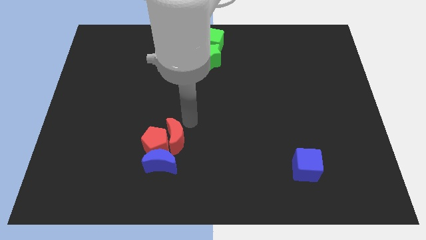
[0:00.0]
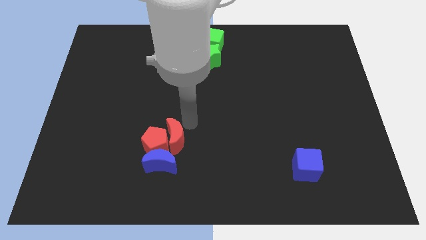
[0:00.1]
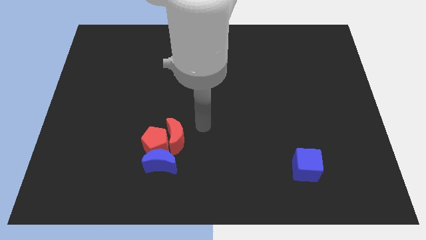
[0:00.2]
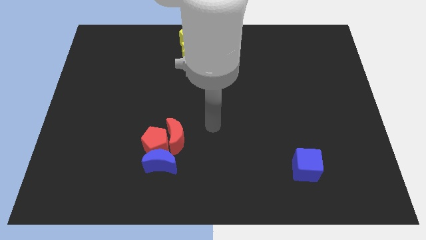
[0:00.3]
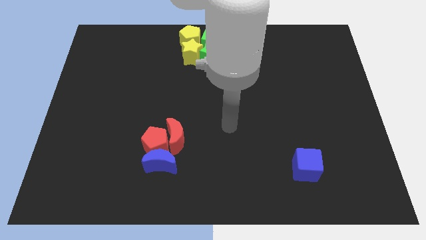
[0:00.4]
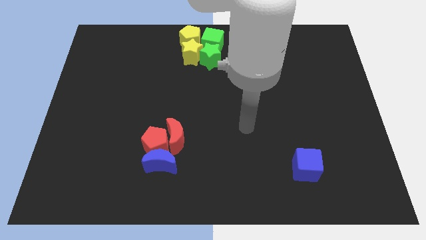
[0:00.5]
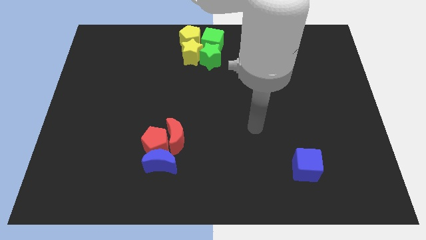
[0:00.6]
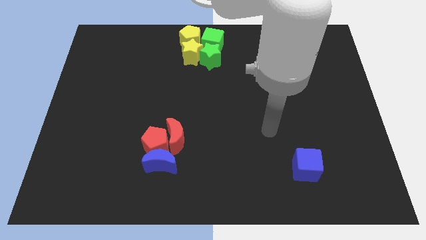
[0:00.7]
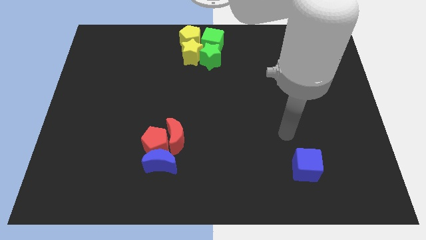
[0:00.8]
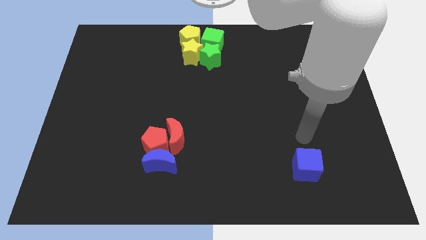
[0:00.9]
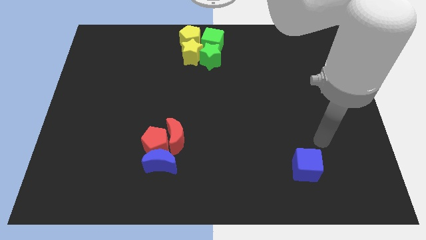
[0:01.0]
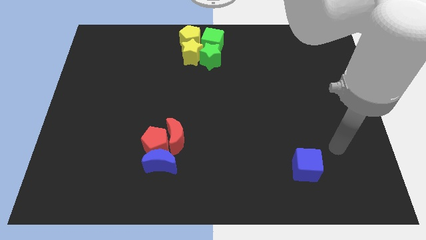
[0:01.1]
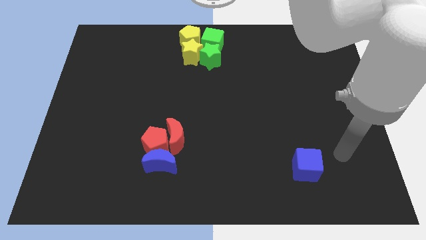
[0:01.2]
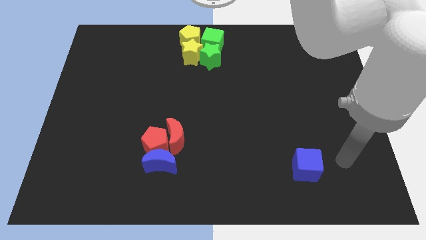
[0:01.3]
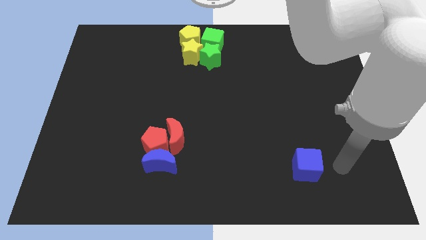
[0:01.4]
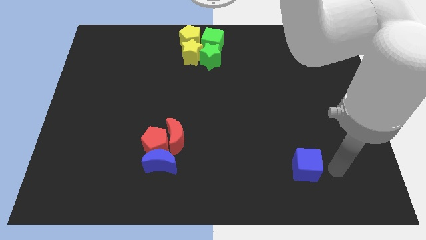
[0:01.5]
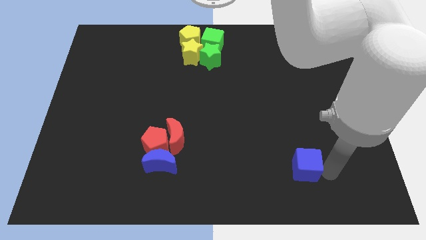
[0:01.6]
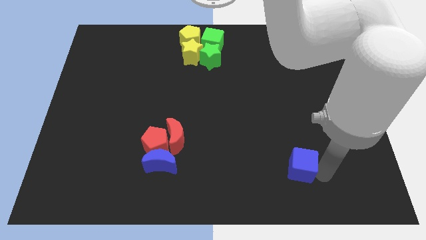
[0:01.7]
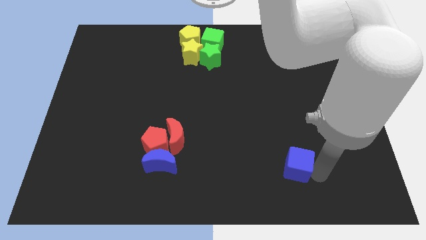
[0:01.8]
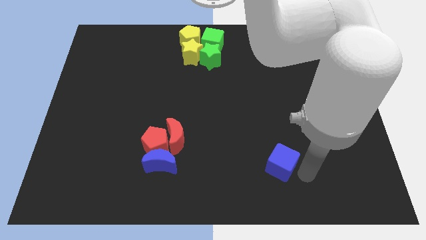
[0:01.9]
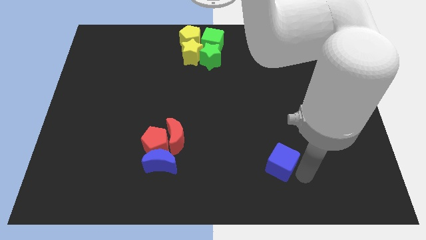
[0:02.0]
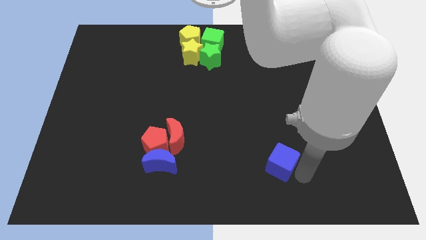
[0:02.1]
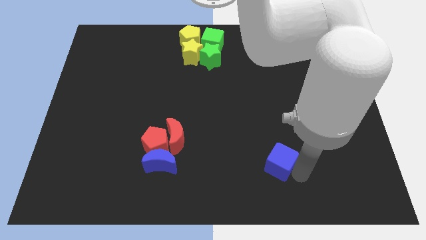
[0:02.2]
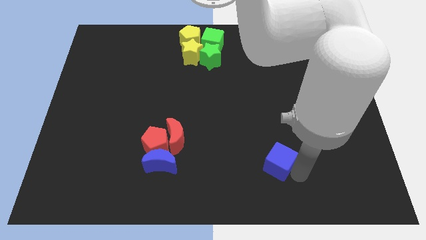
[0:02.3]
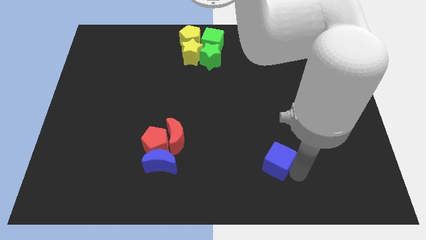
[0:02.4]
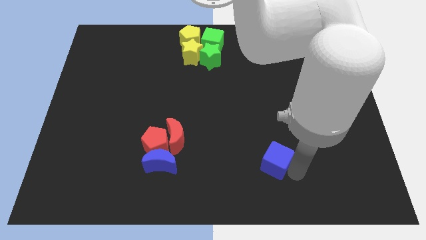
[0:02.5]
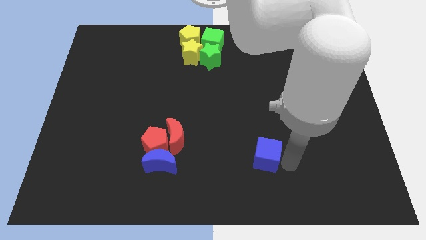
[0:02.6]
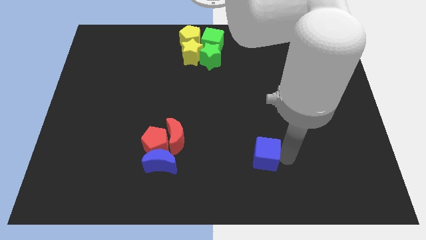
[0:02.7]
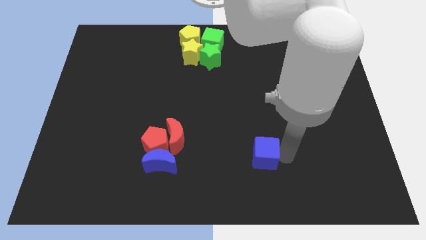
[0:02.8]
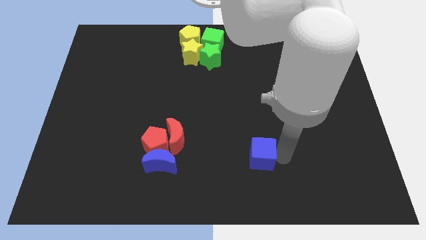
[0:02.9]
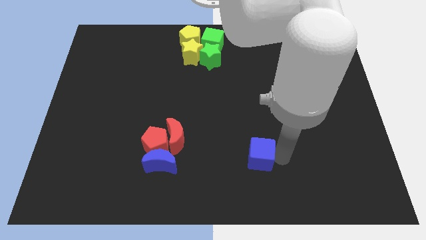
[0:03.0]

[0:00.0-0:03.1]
place blue cube parallel to blue moon

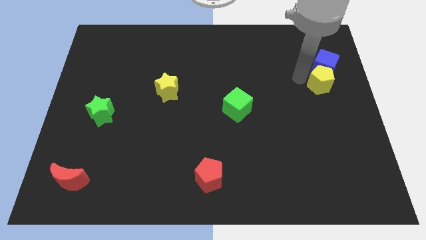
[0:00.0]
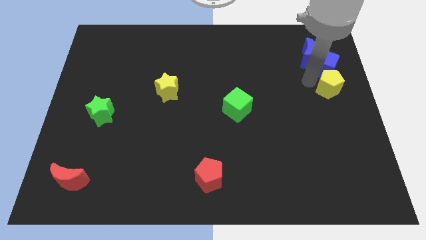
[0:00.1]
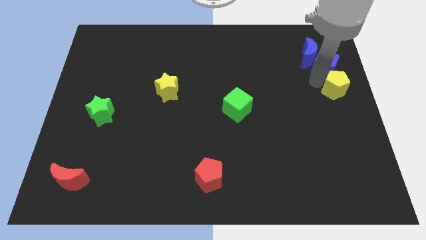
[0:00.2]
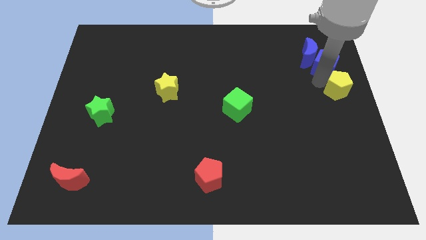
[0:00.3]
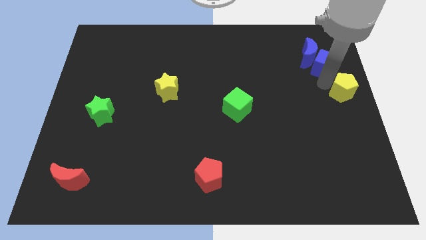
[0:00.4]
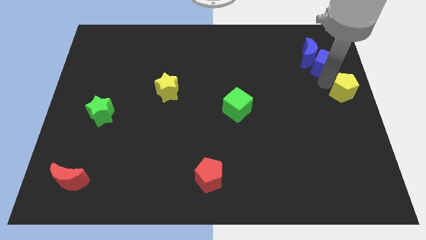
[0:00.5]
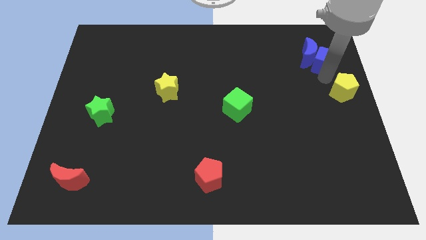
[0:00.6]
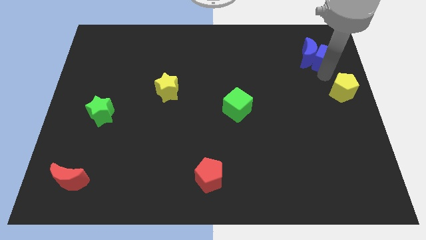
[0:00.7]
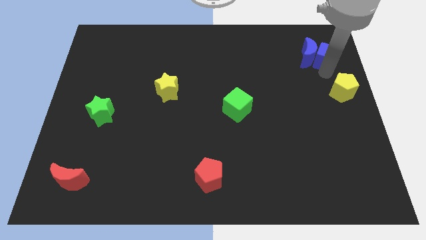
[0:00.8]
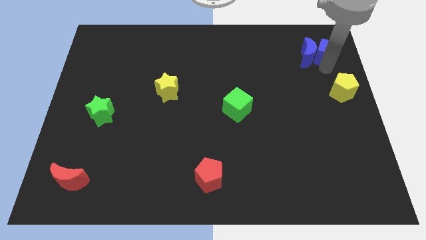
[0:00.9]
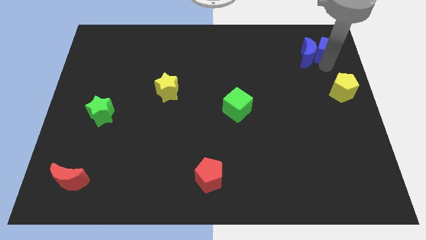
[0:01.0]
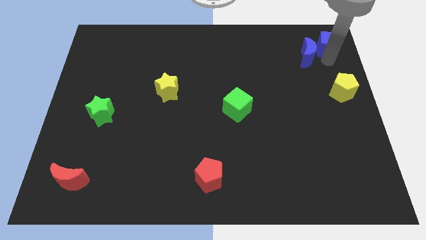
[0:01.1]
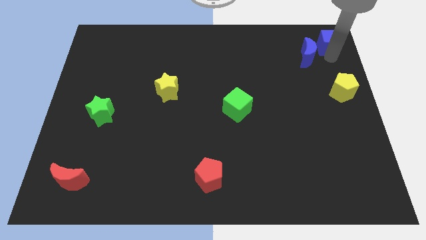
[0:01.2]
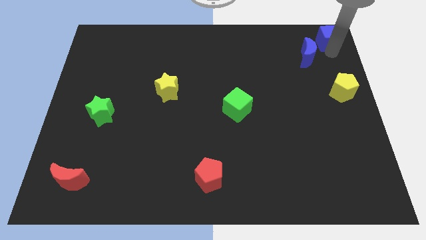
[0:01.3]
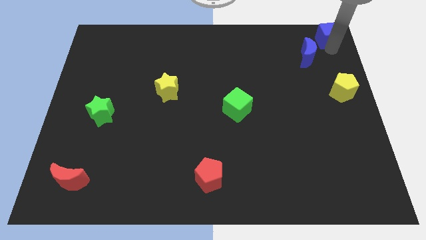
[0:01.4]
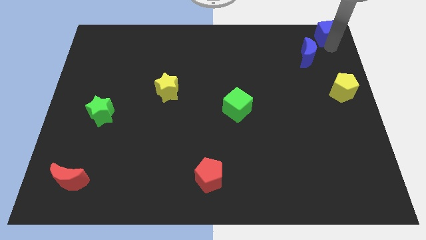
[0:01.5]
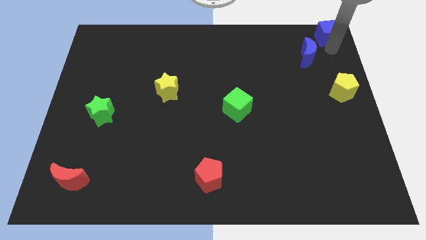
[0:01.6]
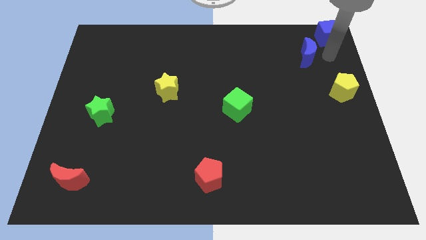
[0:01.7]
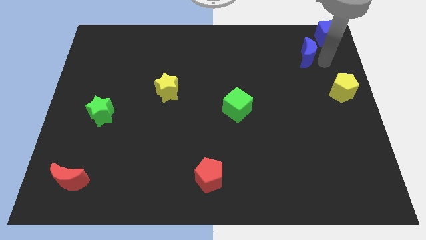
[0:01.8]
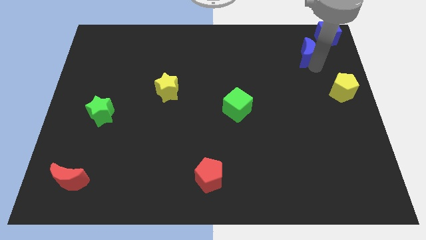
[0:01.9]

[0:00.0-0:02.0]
place blue cube to the top right corner of the board

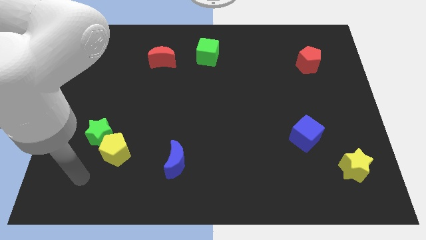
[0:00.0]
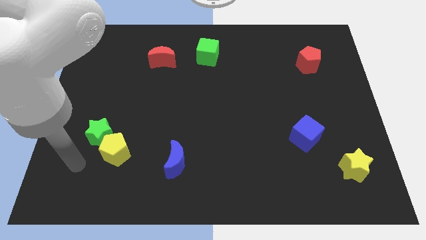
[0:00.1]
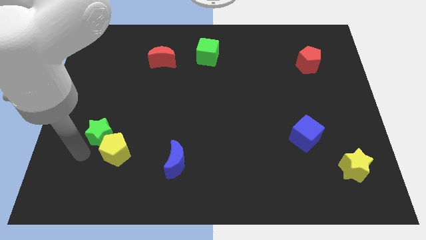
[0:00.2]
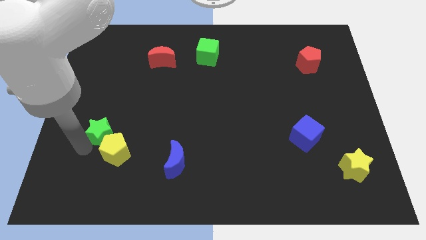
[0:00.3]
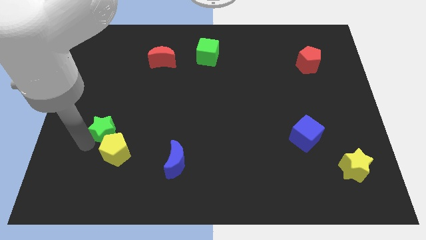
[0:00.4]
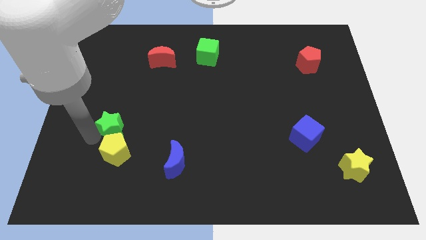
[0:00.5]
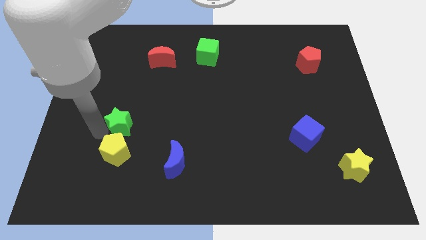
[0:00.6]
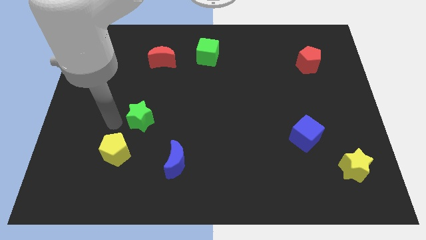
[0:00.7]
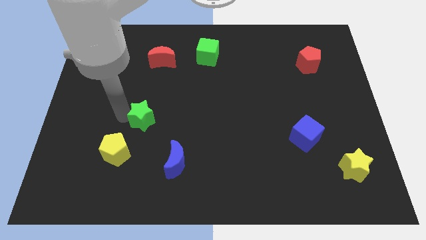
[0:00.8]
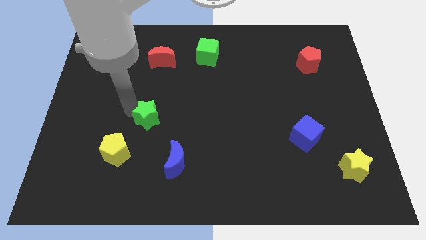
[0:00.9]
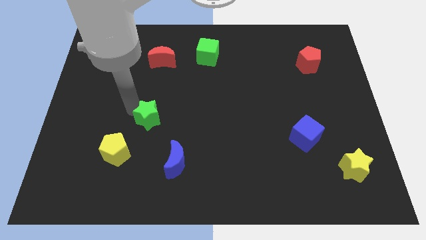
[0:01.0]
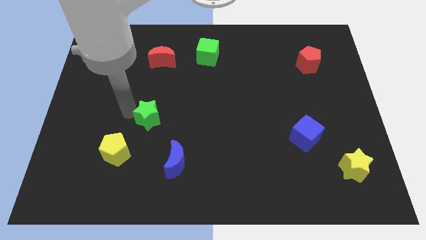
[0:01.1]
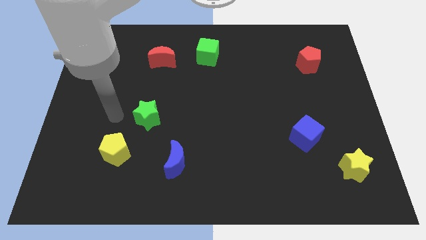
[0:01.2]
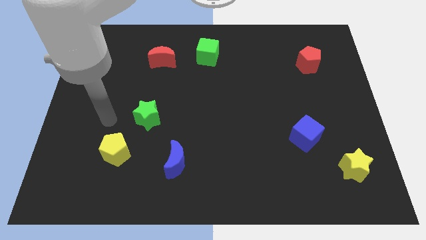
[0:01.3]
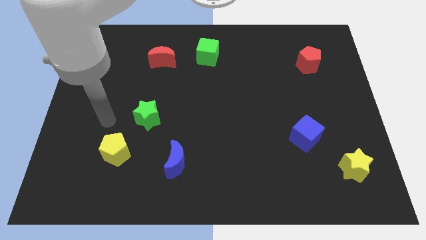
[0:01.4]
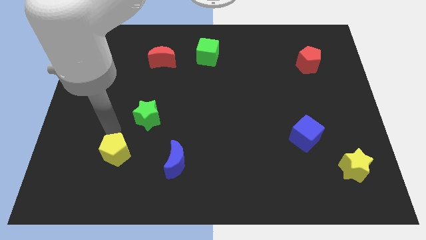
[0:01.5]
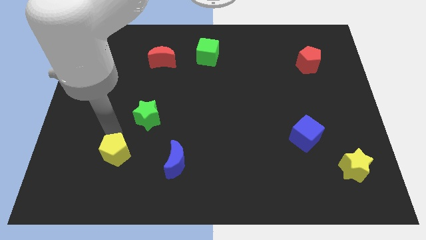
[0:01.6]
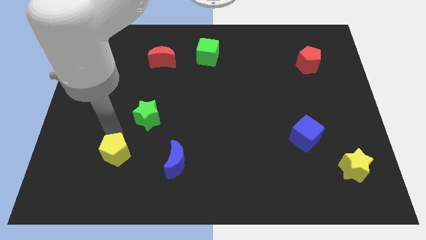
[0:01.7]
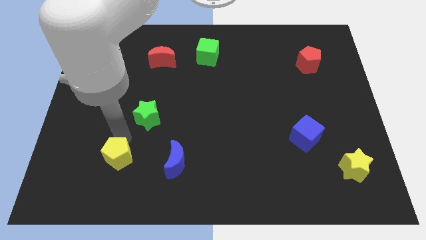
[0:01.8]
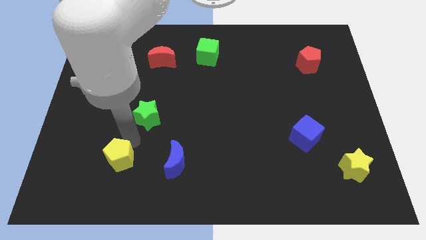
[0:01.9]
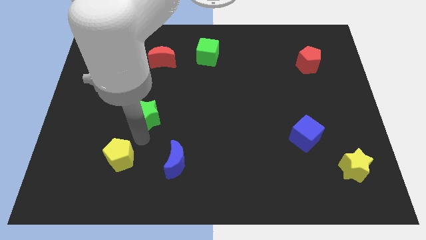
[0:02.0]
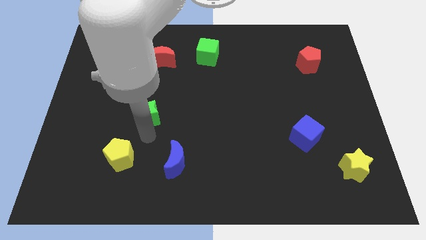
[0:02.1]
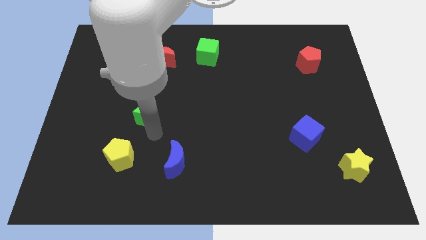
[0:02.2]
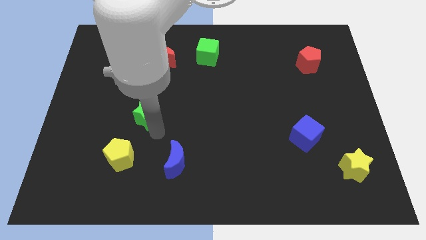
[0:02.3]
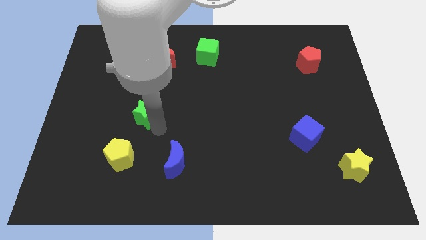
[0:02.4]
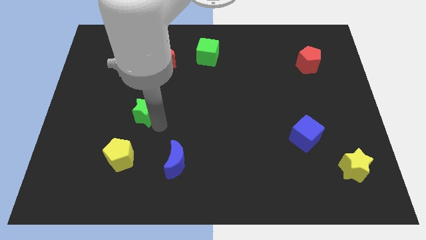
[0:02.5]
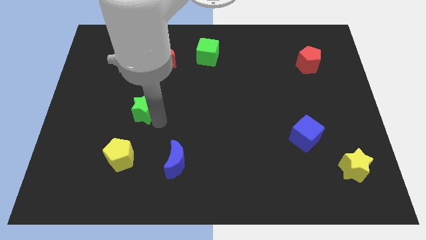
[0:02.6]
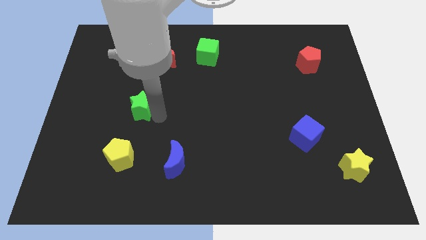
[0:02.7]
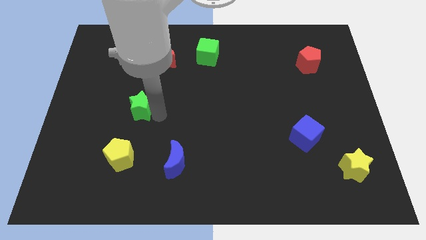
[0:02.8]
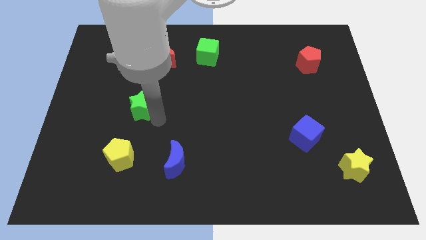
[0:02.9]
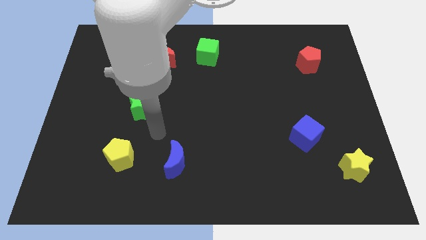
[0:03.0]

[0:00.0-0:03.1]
adjust the green star and yellow pentagon to form a diagonal line with the red crescent

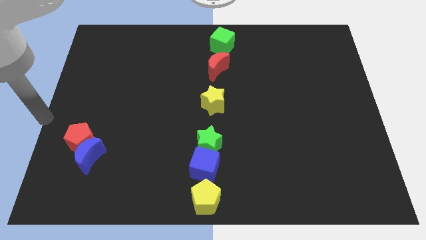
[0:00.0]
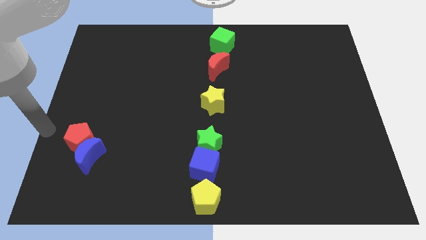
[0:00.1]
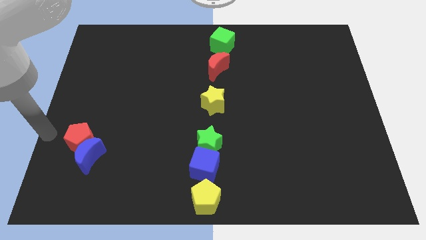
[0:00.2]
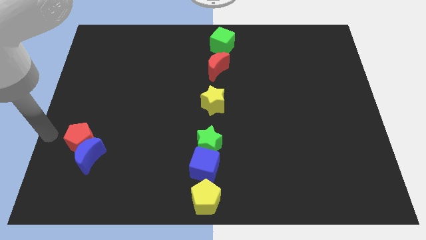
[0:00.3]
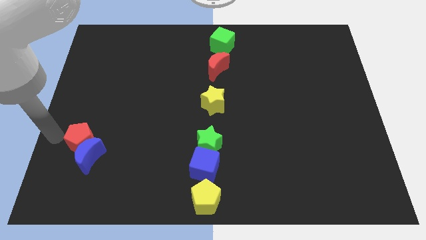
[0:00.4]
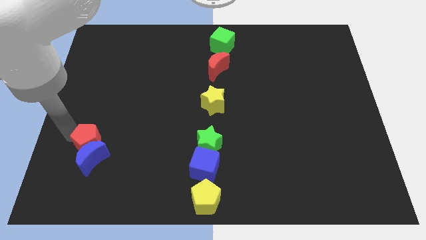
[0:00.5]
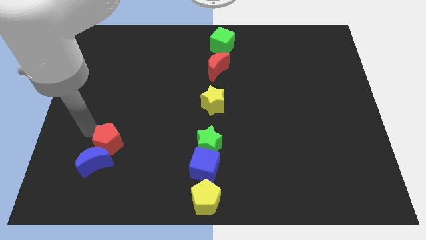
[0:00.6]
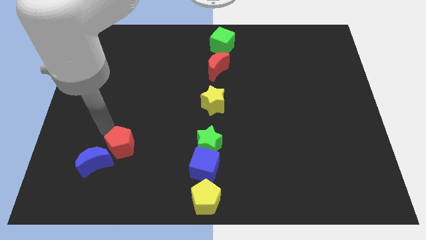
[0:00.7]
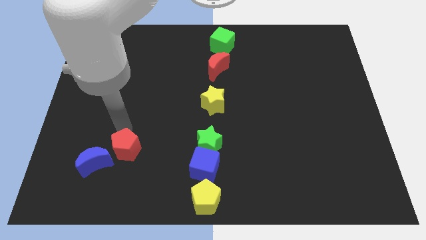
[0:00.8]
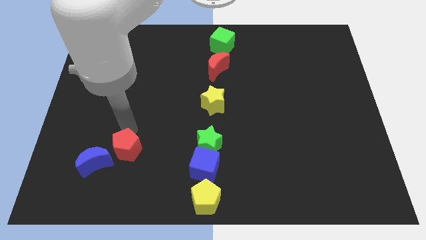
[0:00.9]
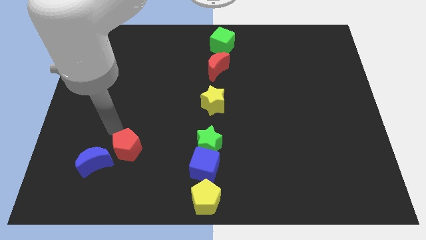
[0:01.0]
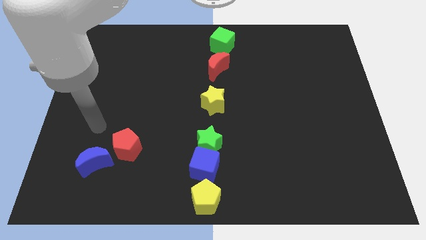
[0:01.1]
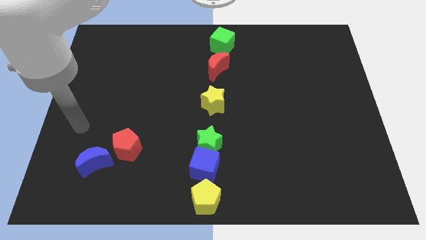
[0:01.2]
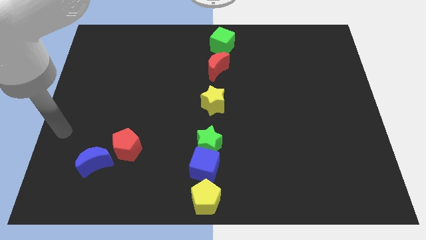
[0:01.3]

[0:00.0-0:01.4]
separate the red pentagon away from the blue crescent
